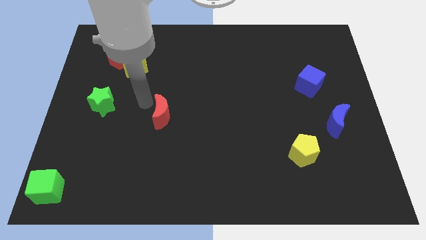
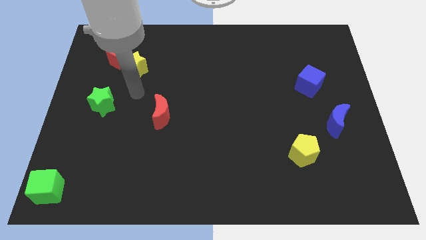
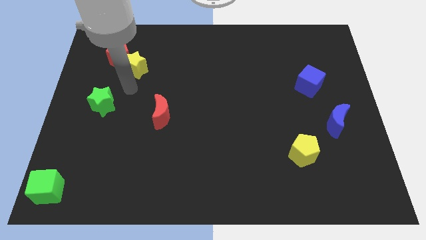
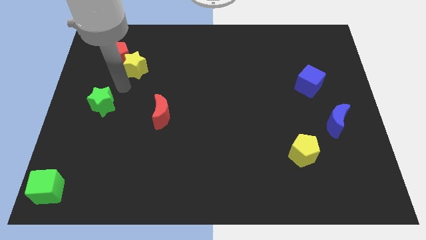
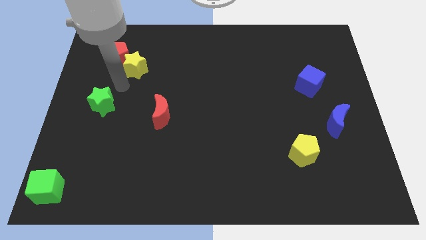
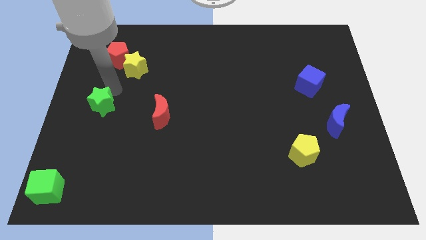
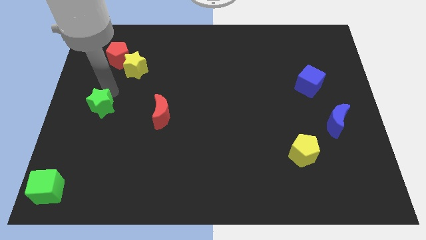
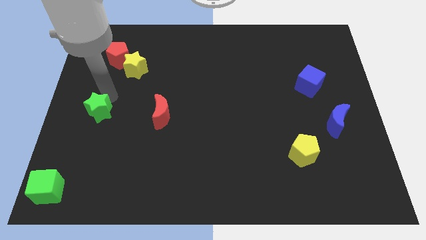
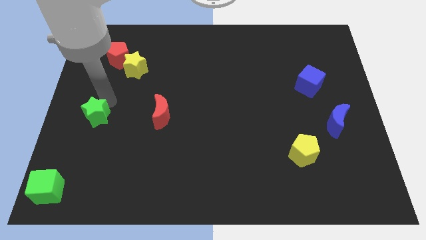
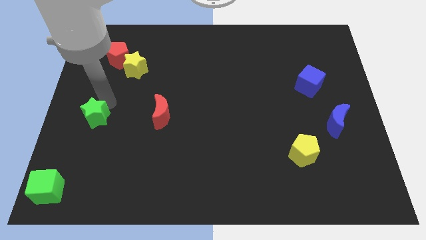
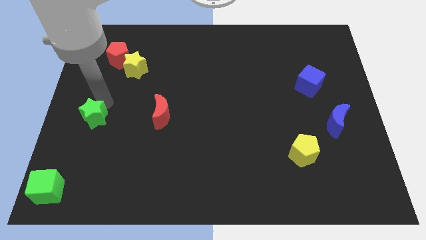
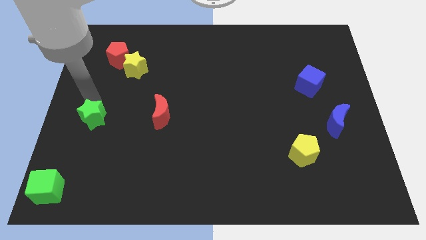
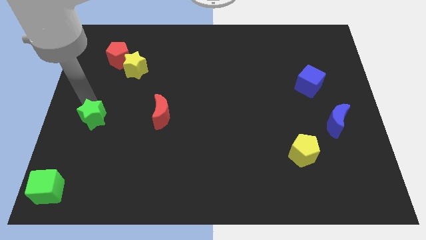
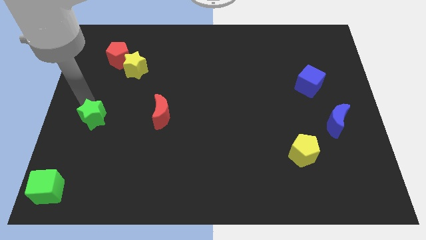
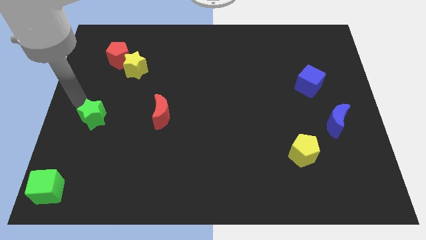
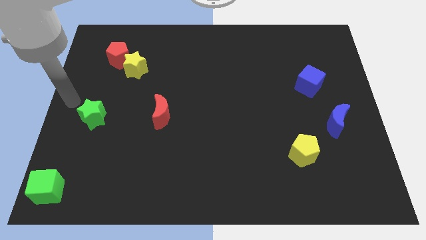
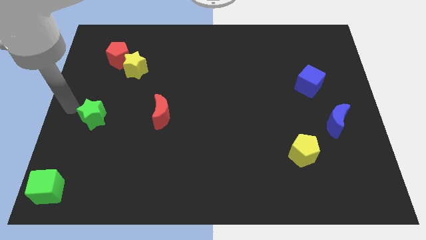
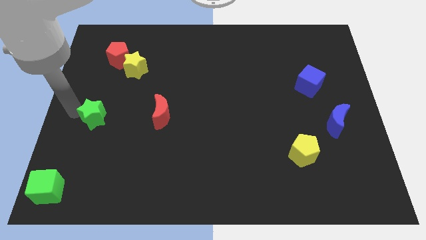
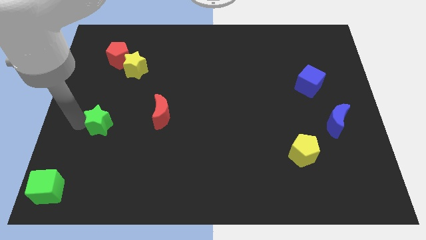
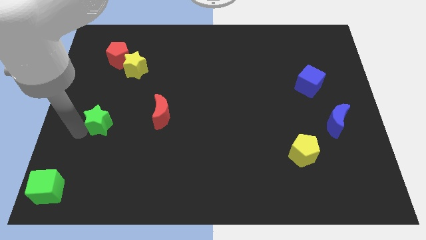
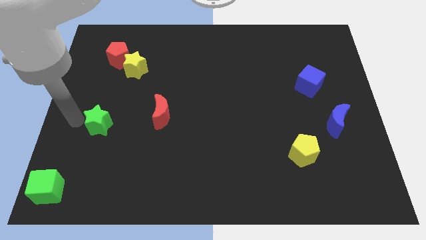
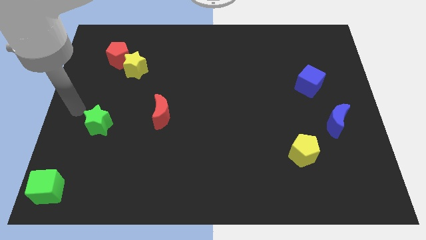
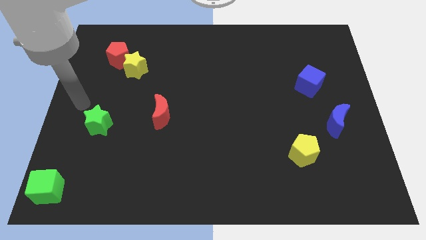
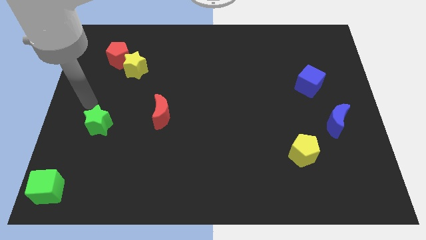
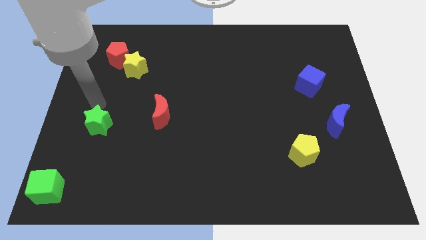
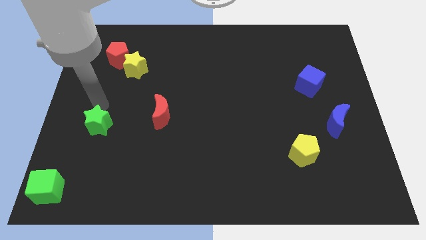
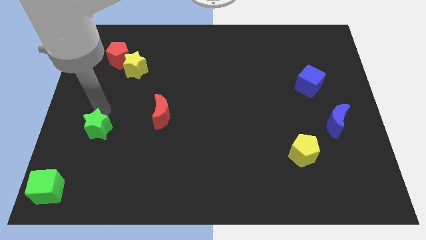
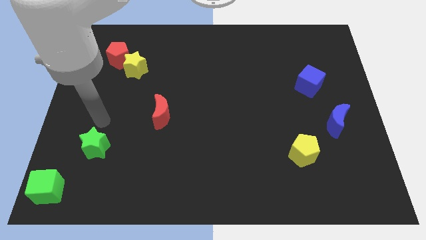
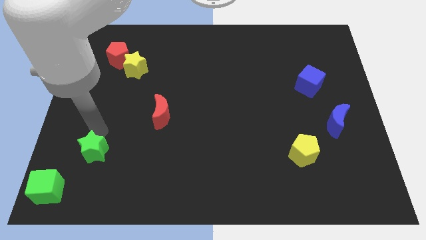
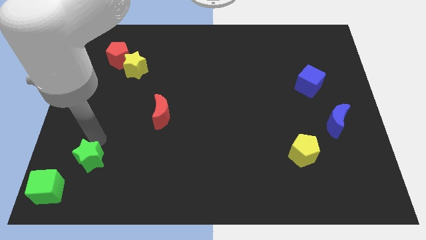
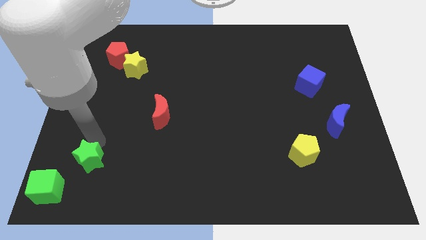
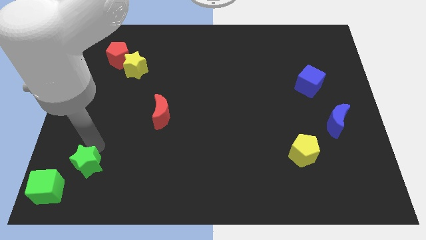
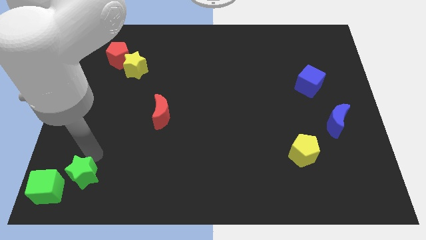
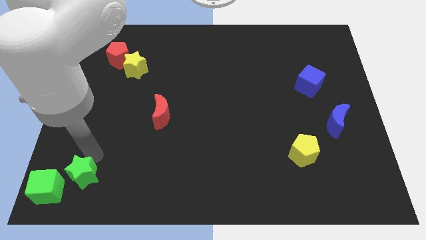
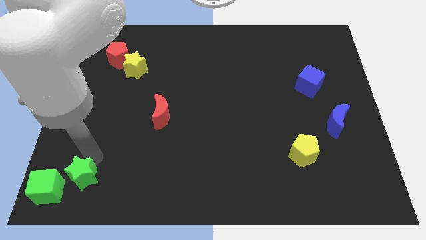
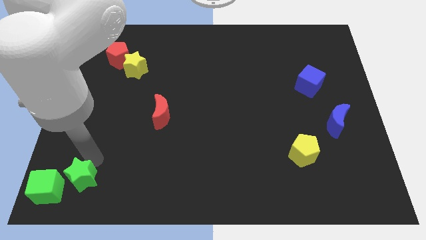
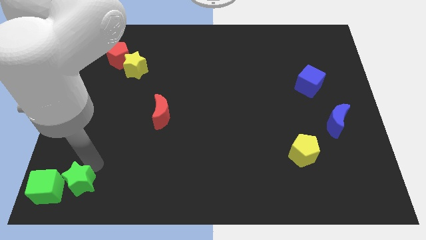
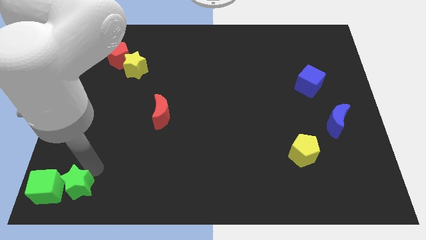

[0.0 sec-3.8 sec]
move the green star to the right of the green cube

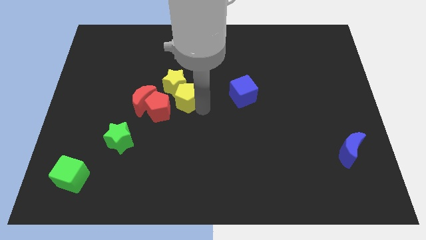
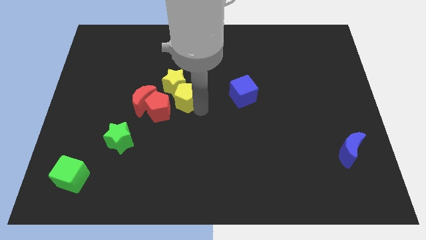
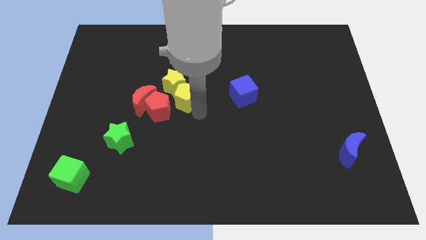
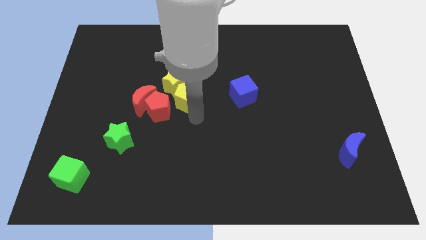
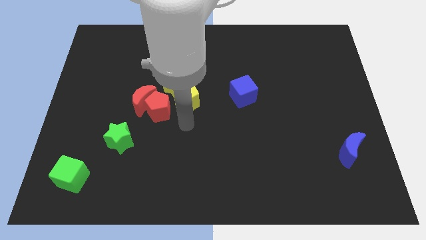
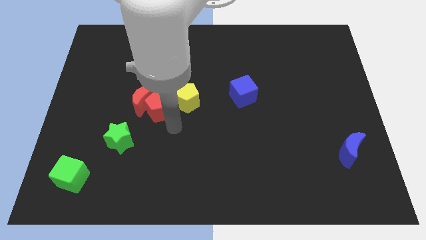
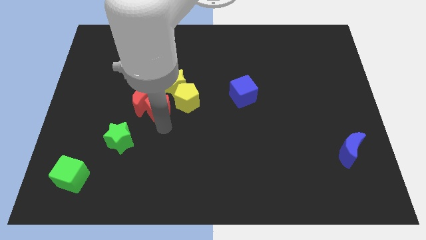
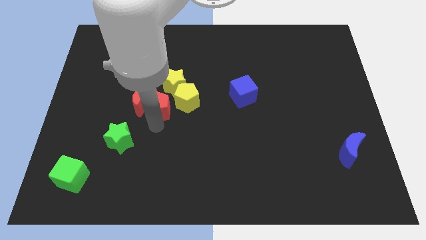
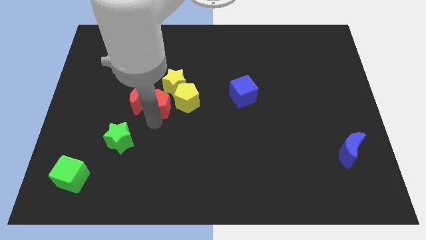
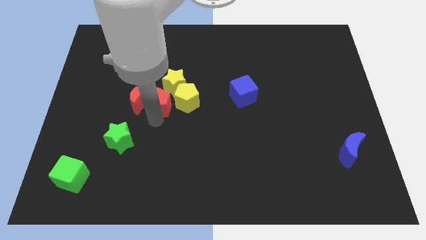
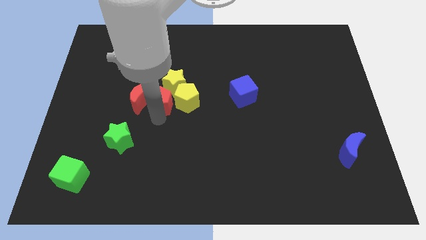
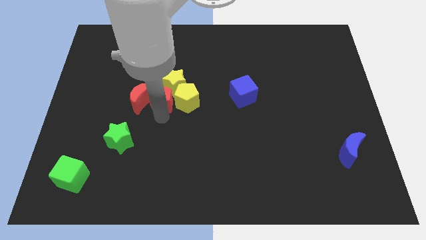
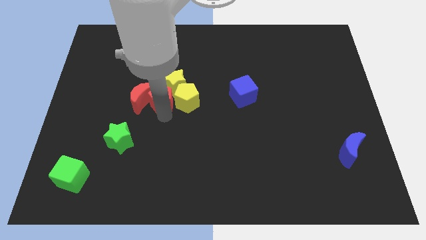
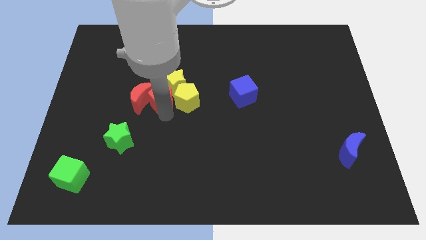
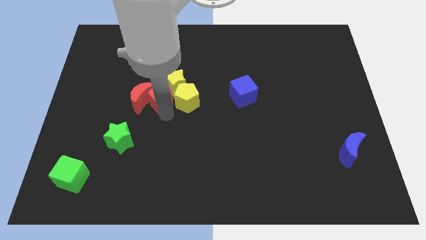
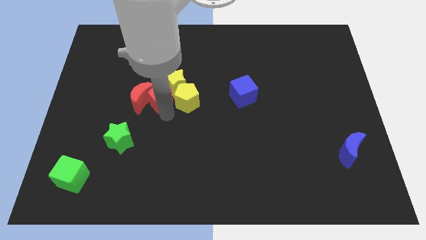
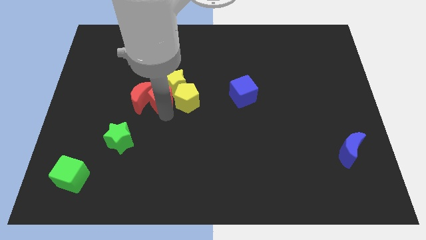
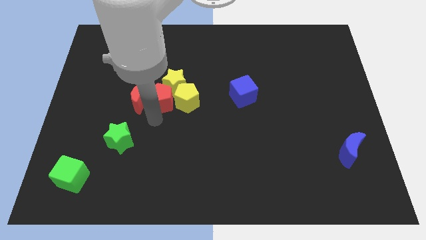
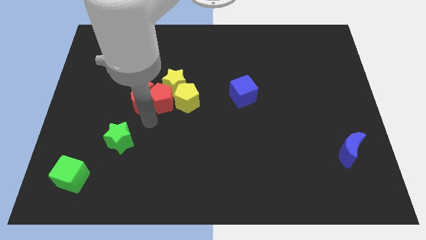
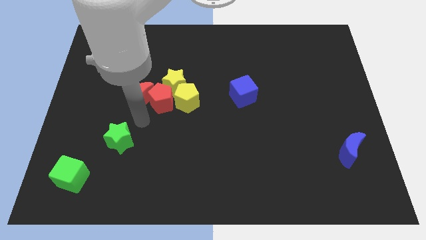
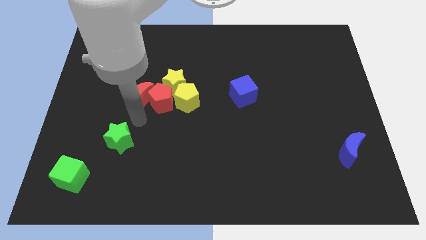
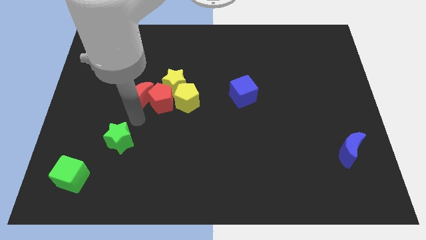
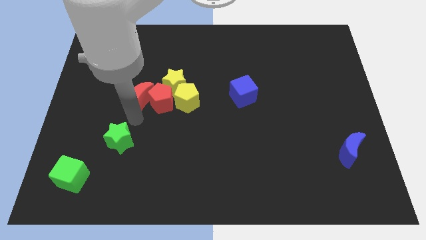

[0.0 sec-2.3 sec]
push the red pentagon into yellow star at the bottom

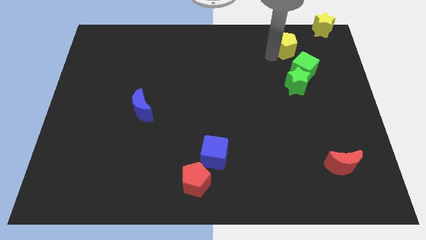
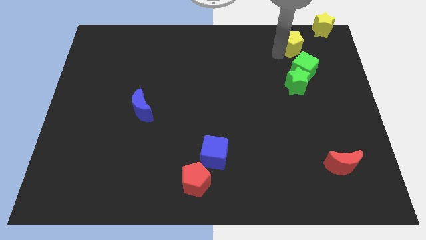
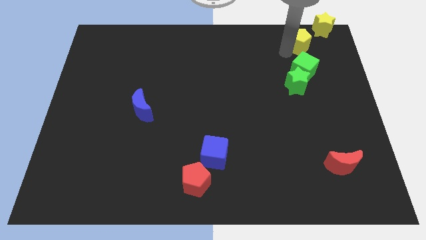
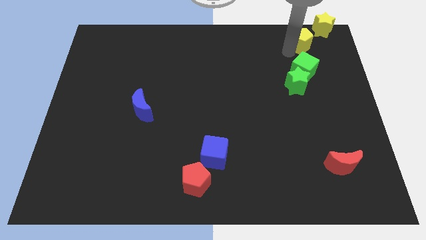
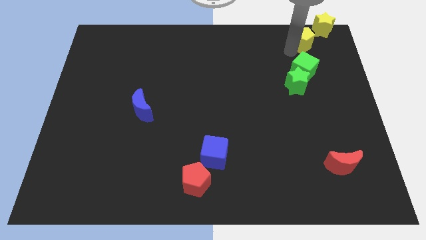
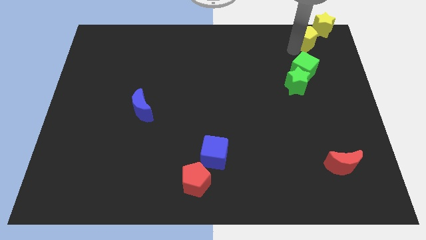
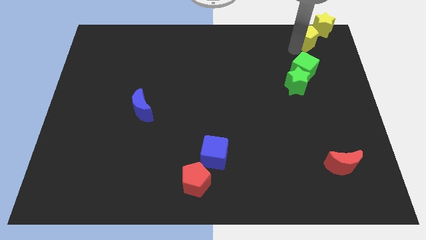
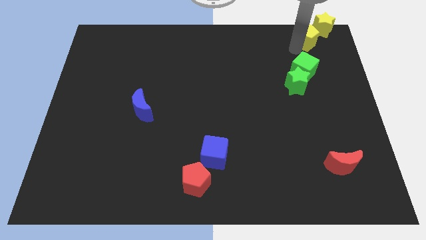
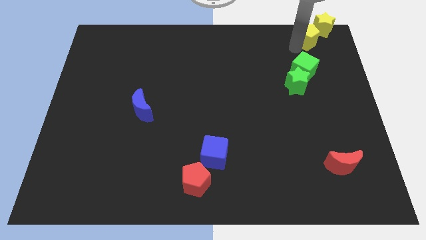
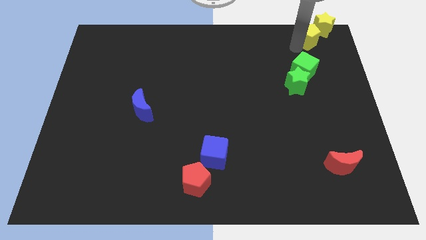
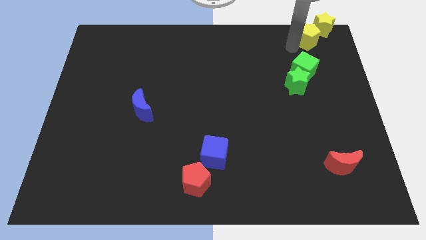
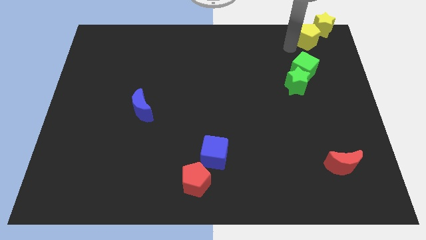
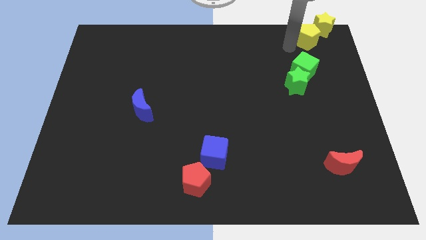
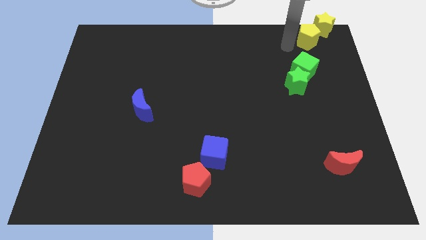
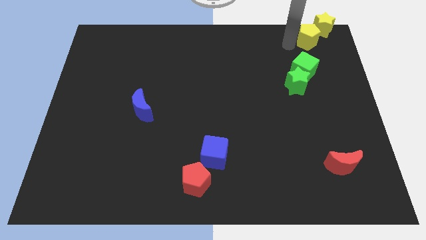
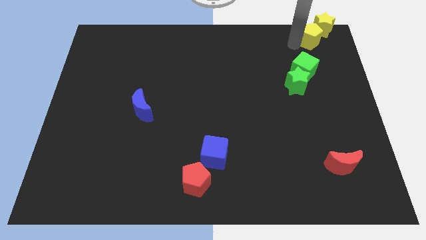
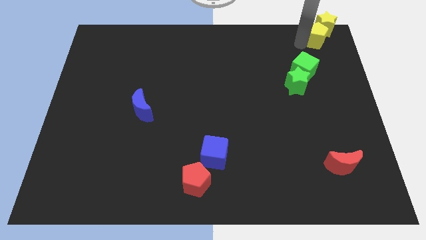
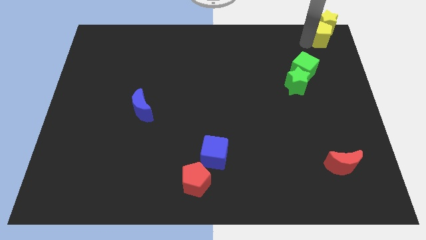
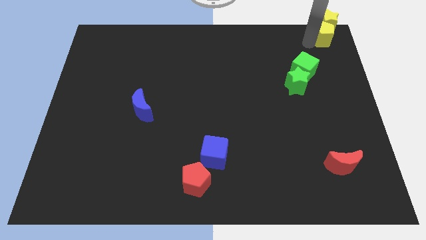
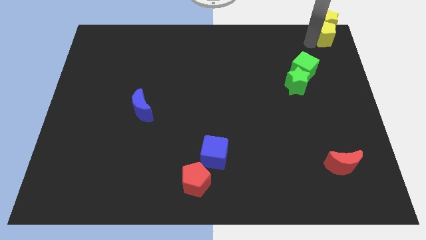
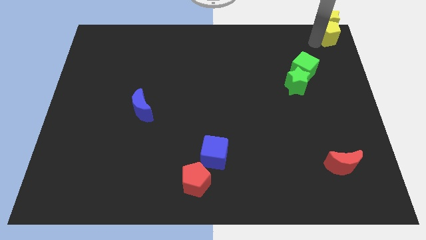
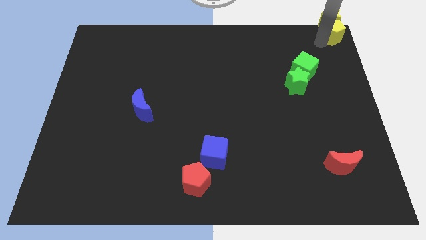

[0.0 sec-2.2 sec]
slide the yellow pentagon into the yellow star

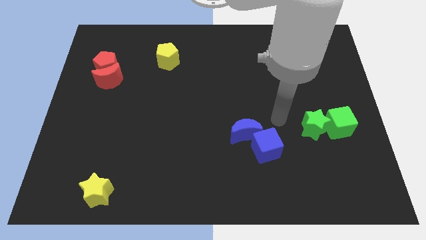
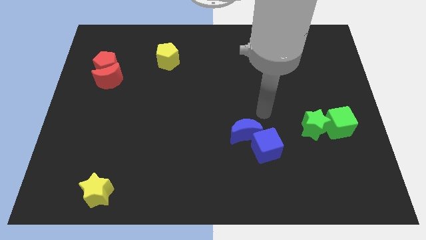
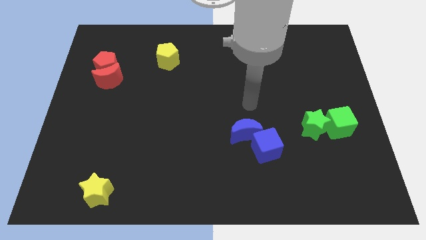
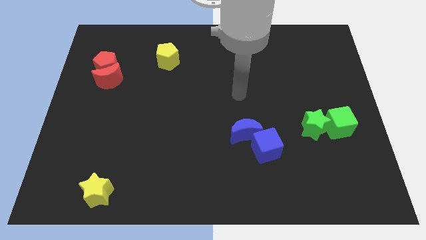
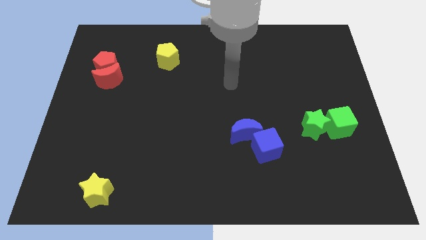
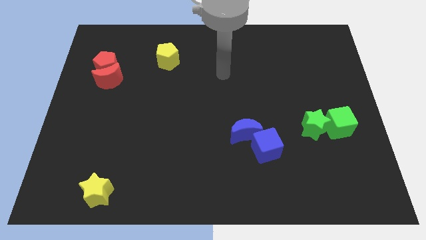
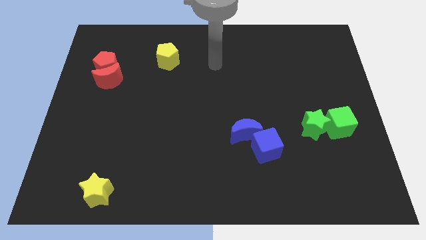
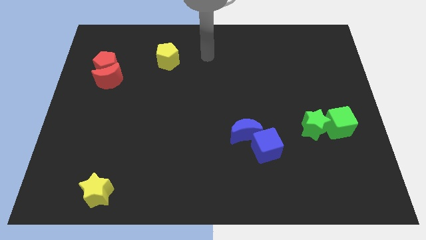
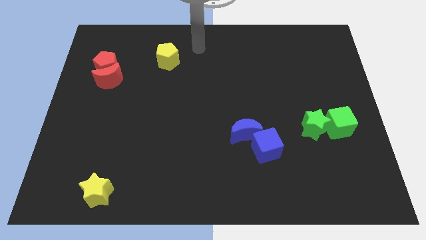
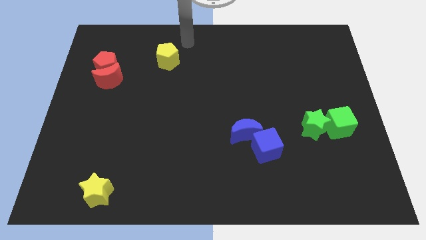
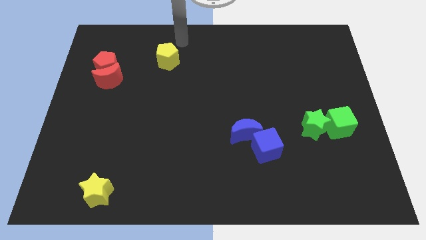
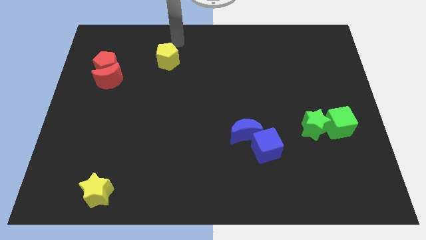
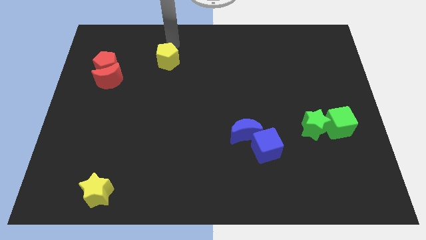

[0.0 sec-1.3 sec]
move the arm towards the yellow pentagon
